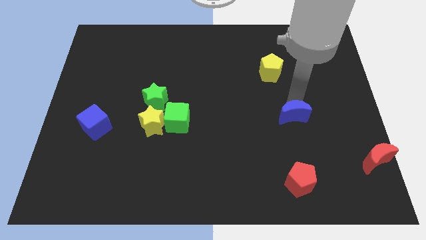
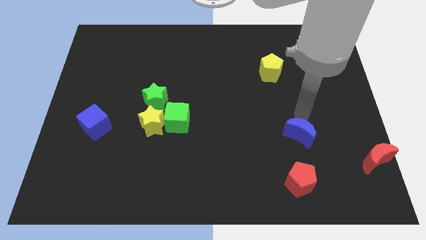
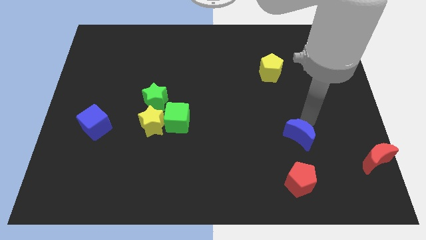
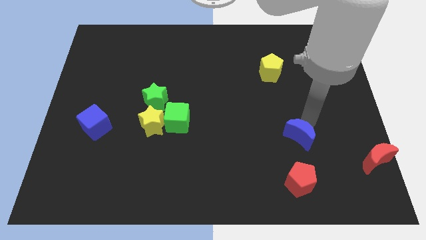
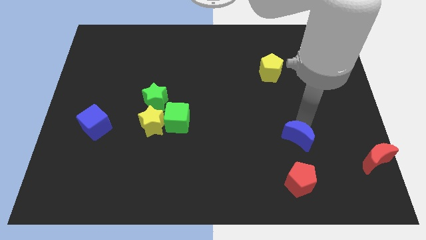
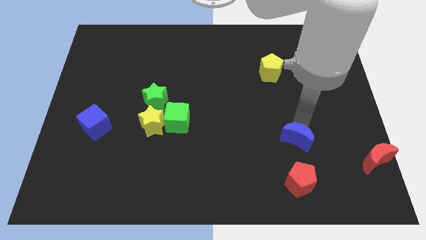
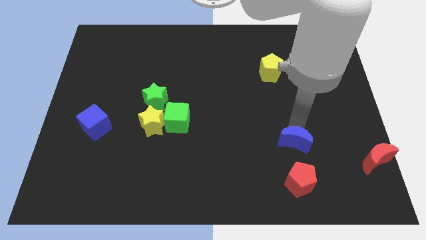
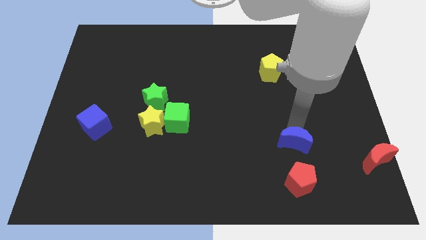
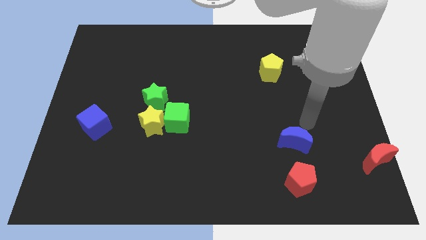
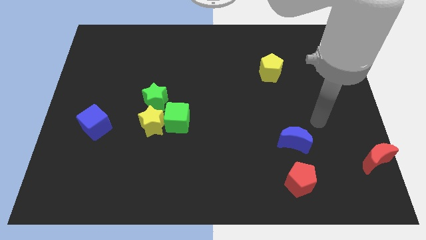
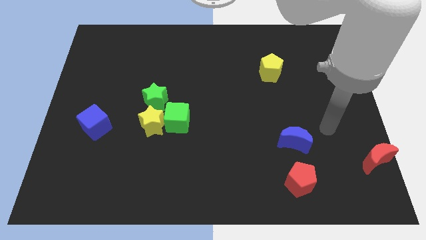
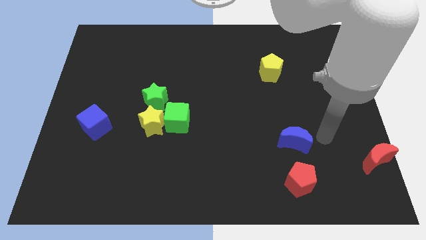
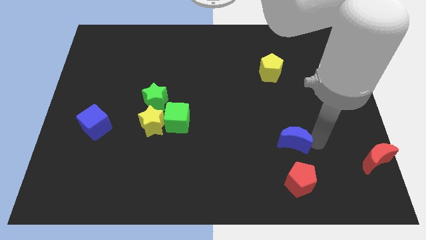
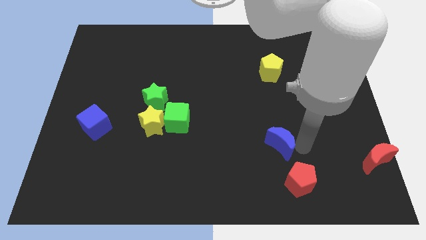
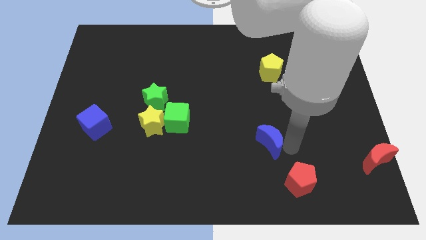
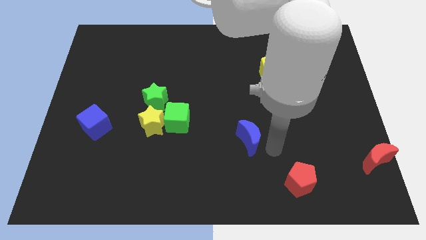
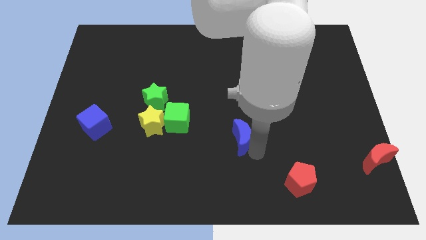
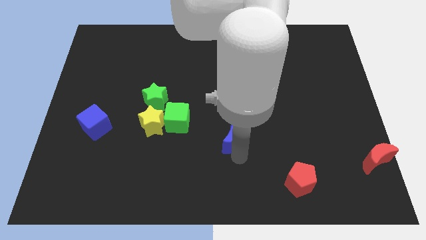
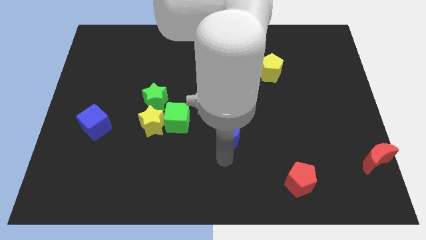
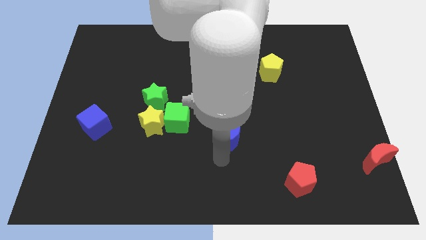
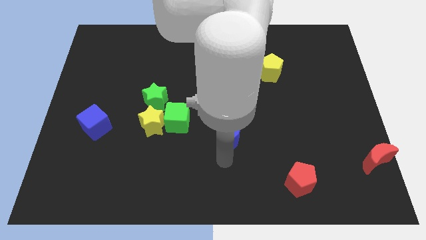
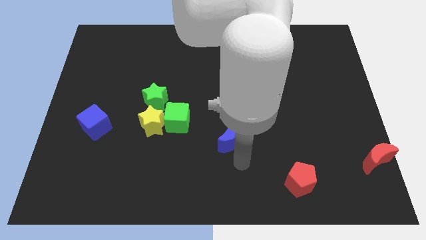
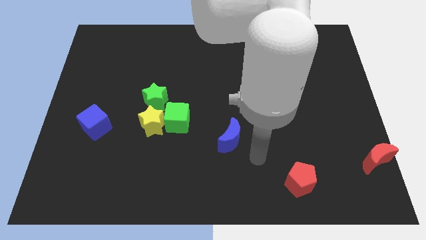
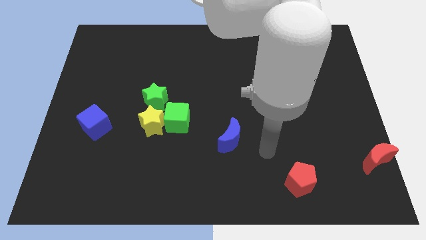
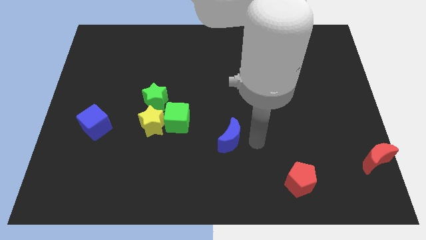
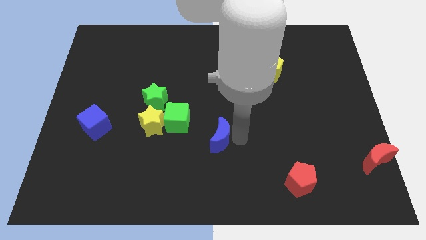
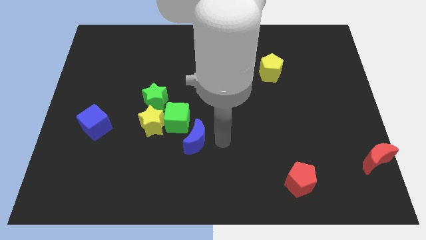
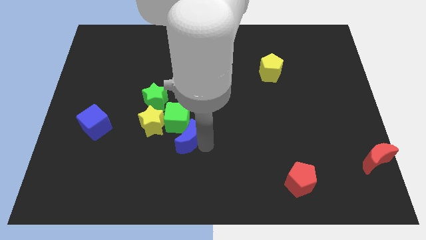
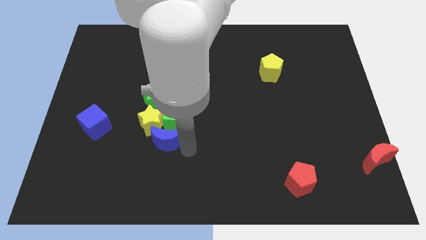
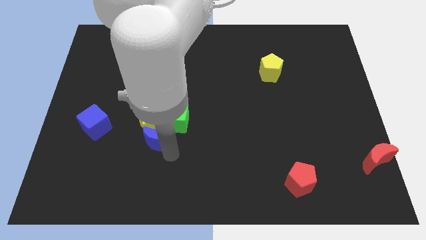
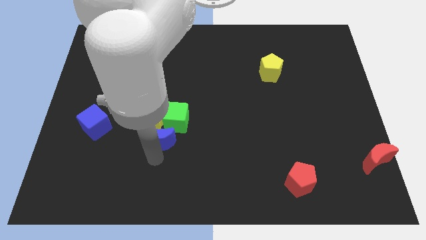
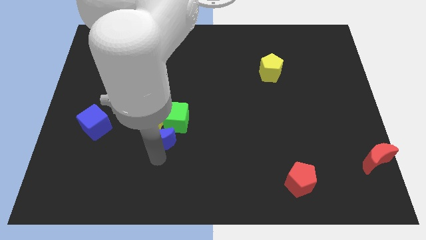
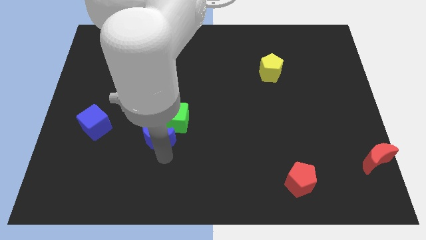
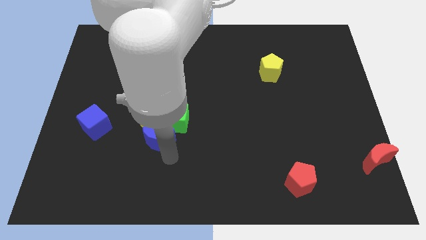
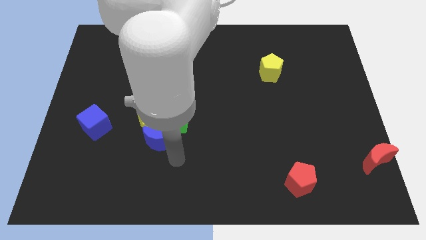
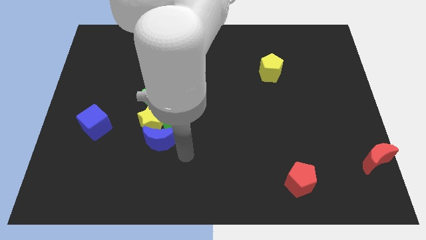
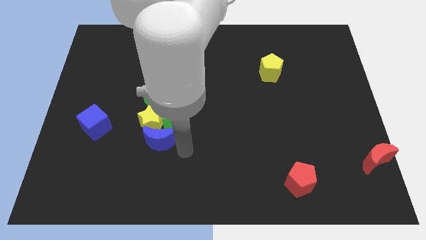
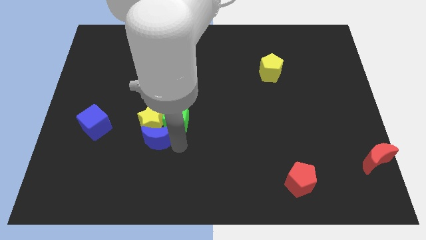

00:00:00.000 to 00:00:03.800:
move the blue moon at the bottom of the yellow star and green cube

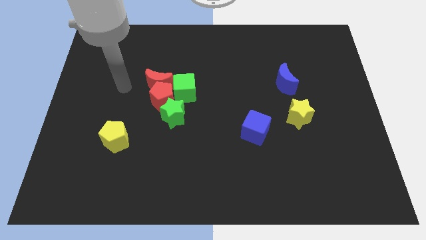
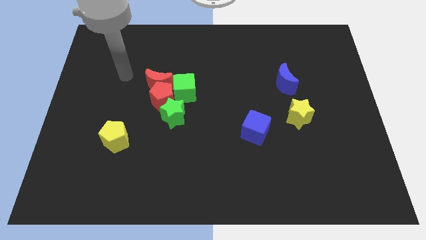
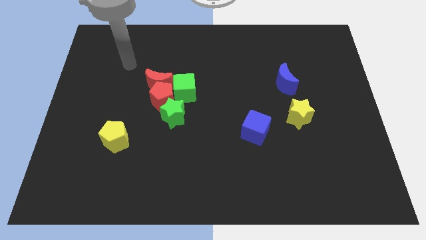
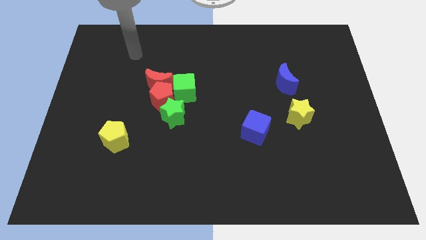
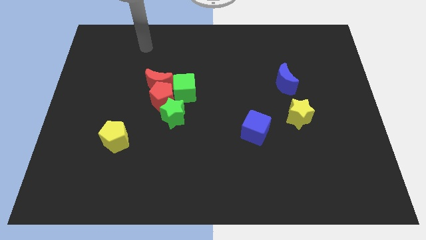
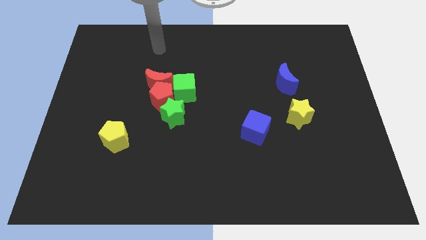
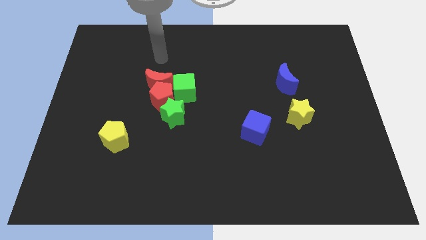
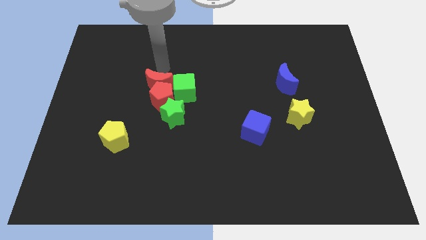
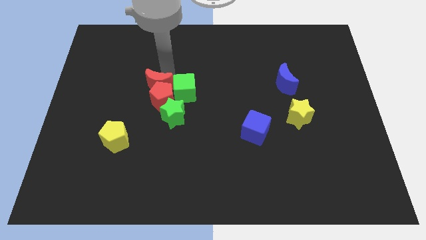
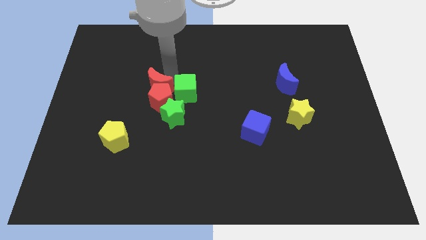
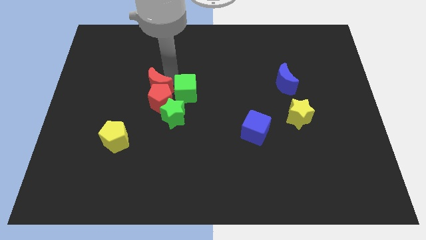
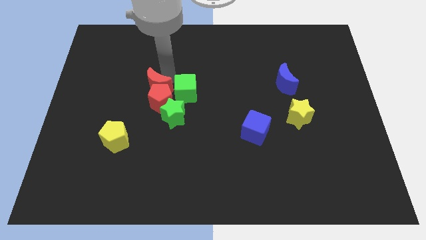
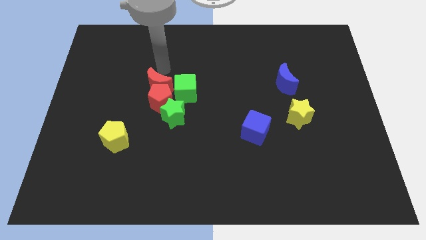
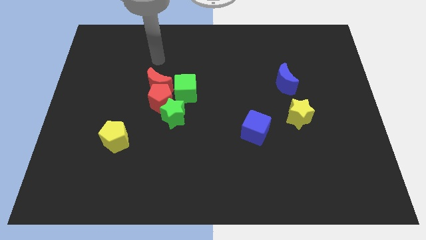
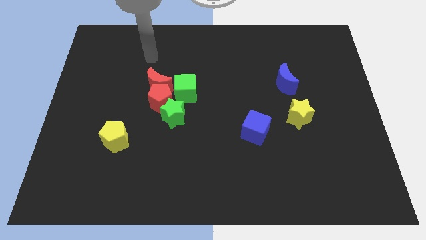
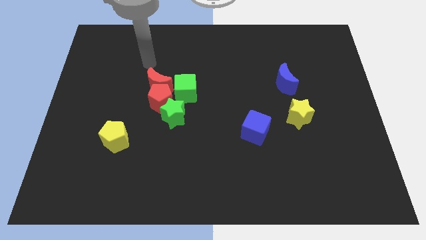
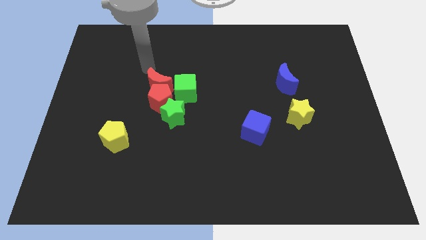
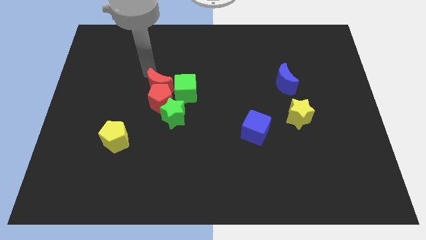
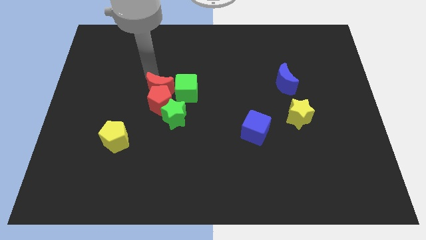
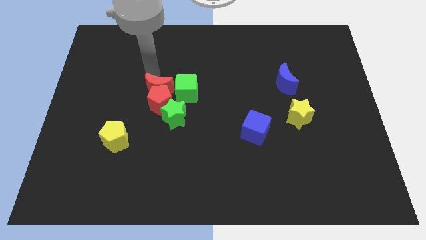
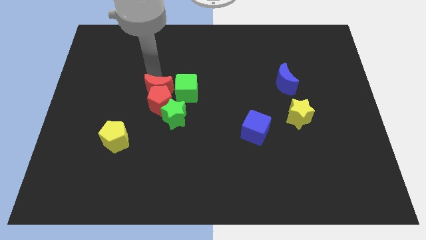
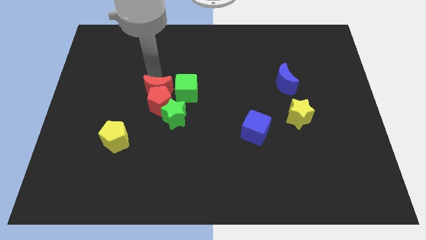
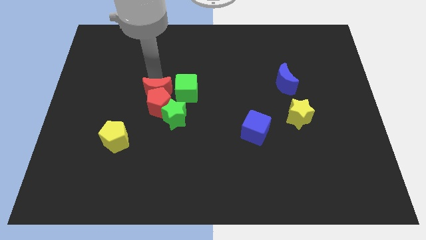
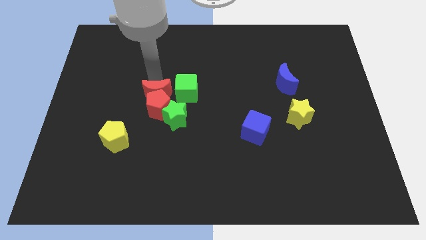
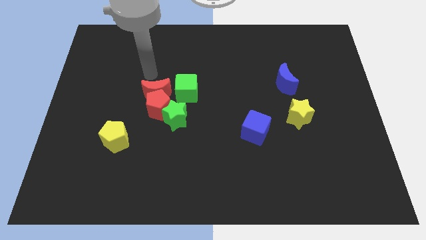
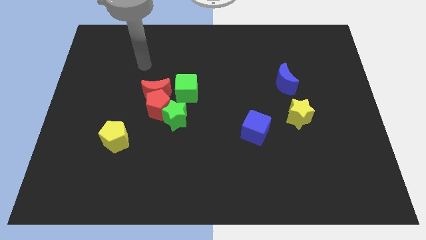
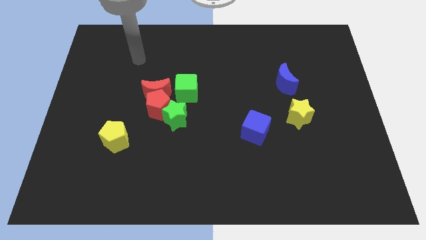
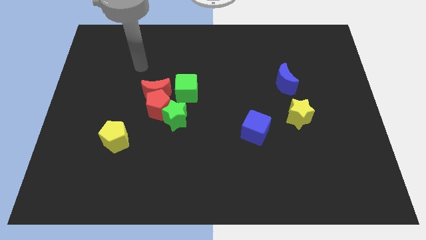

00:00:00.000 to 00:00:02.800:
move the red crescent towards downward

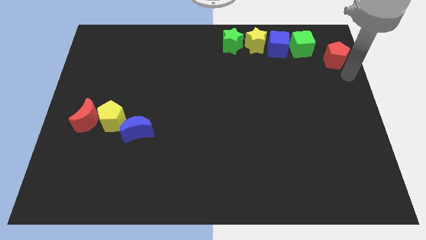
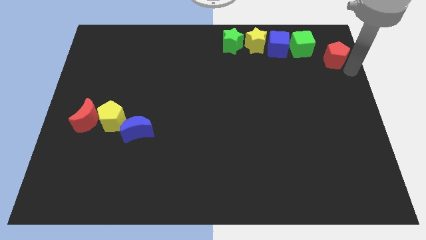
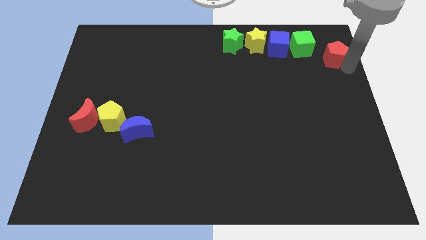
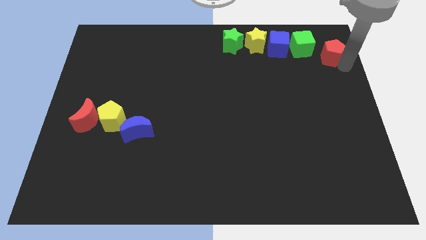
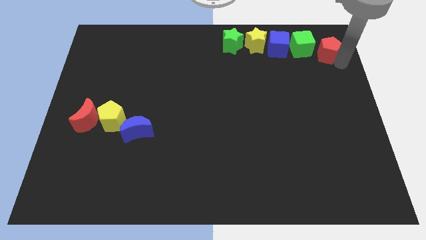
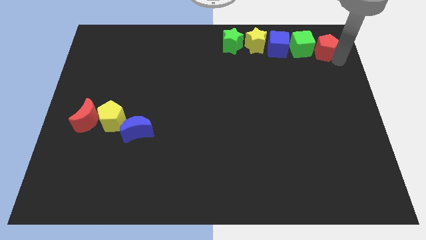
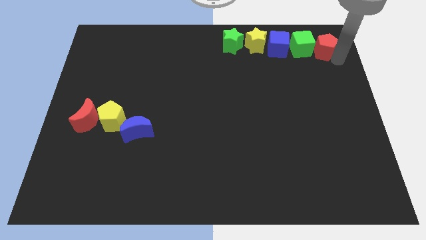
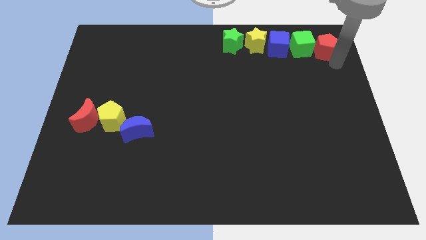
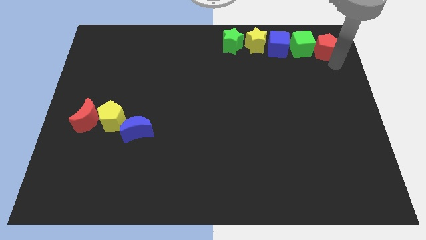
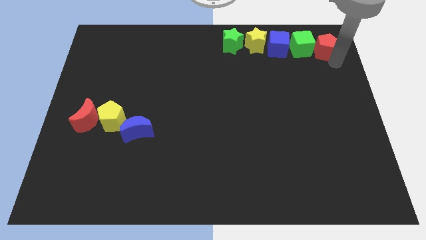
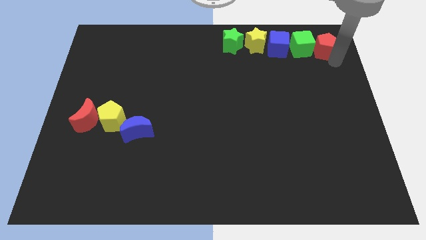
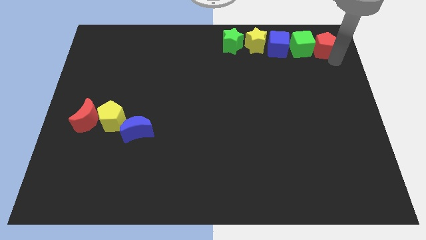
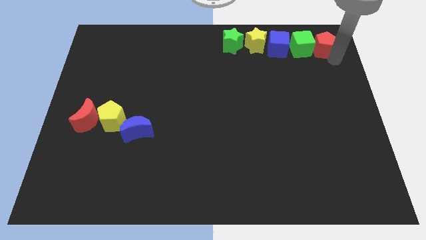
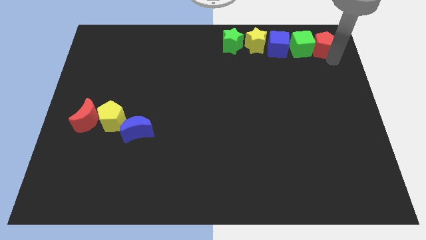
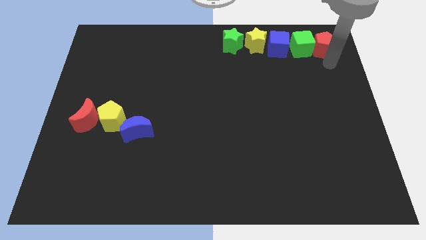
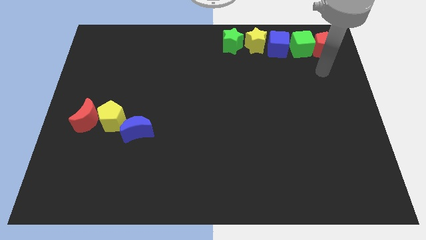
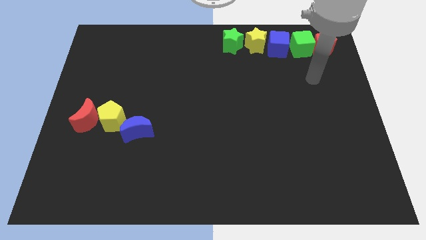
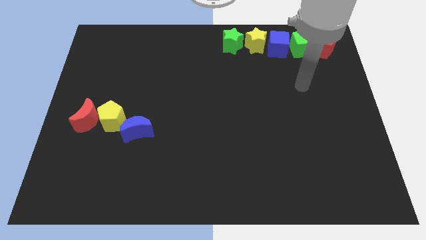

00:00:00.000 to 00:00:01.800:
slide the red pentagon into the right side of the green cube

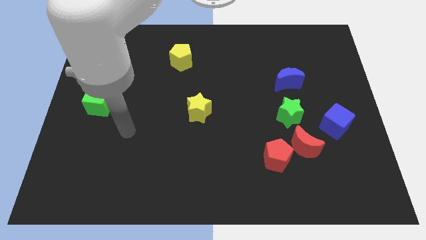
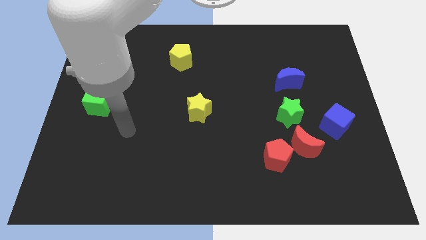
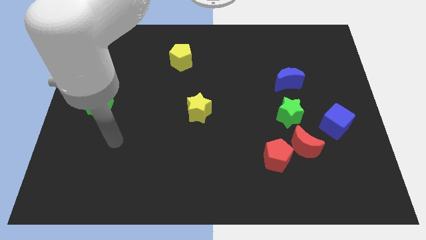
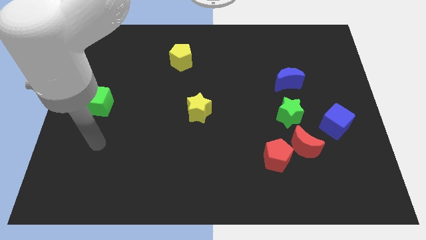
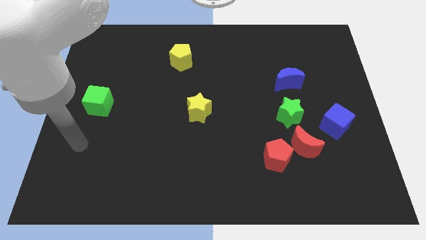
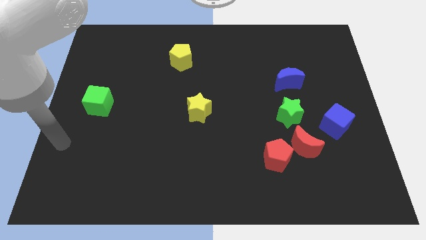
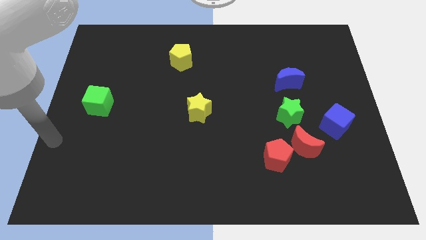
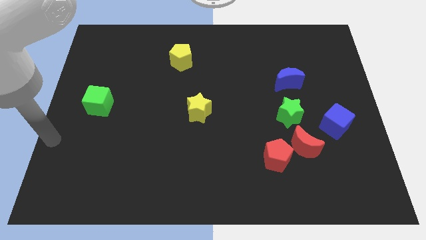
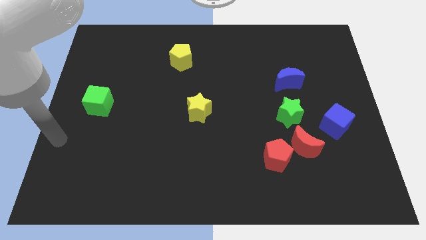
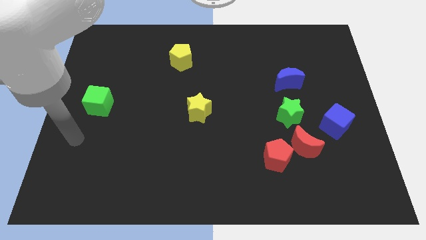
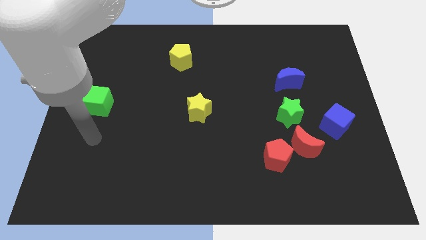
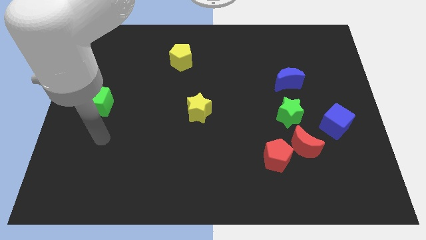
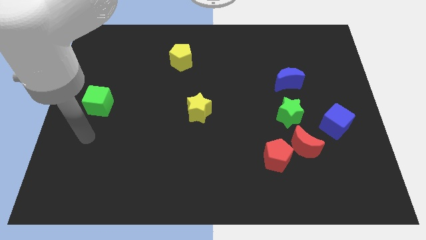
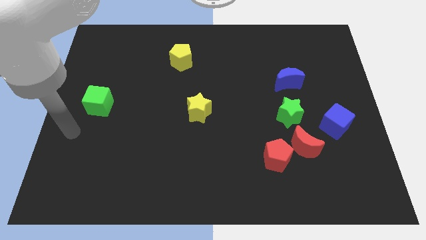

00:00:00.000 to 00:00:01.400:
move the arm towards the green cube
